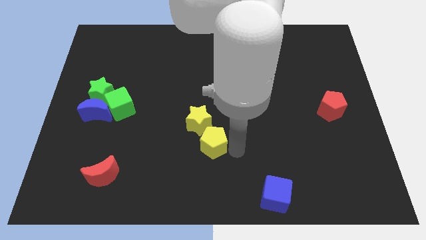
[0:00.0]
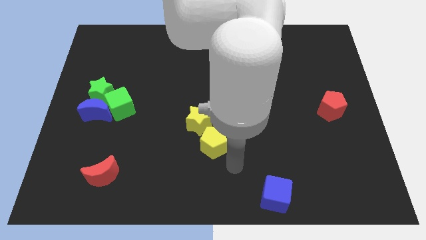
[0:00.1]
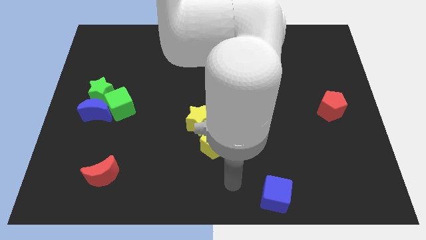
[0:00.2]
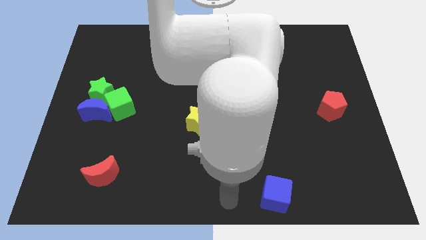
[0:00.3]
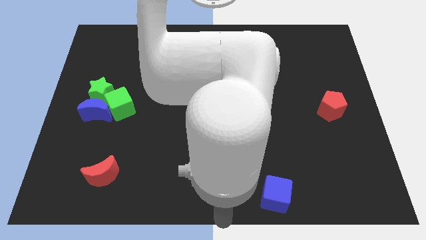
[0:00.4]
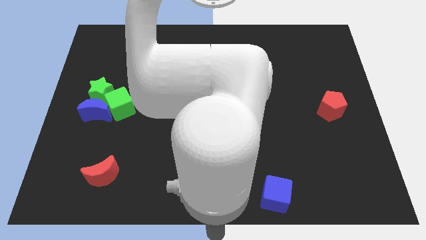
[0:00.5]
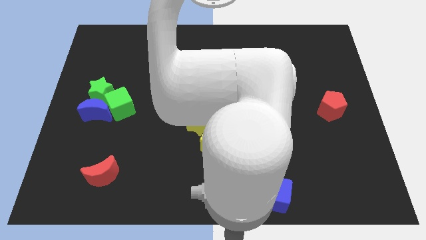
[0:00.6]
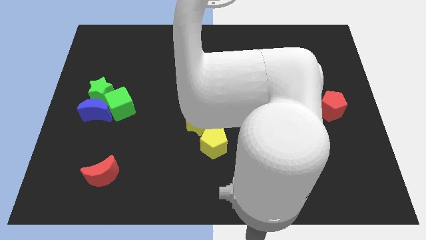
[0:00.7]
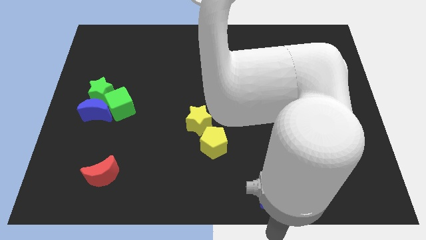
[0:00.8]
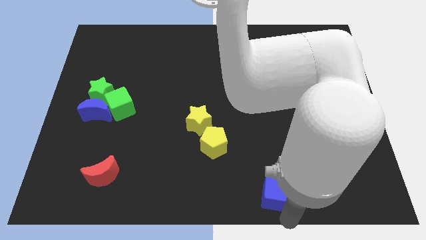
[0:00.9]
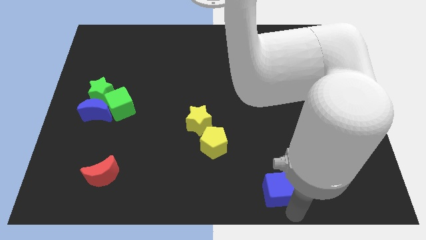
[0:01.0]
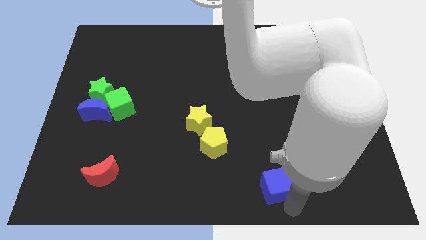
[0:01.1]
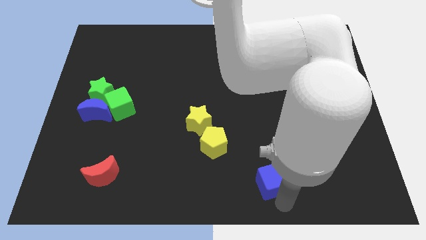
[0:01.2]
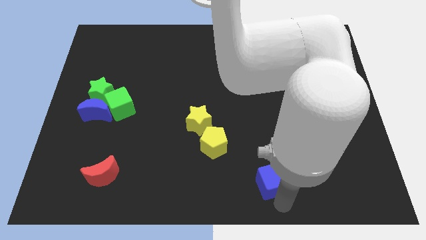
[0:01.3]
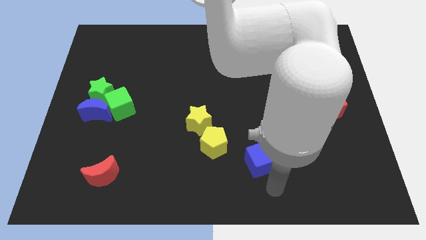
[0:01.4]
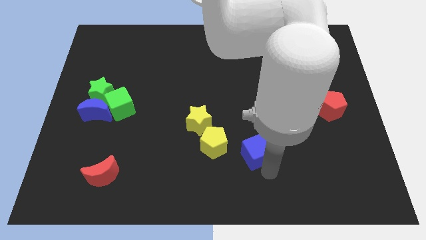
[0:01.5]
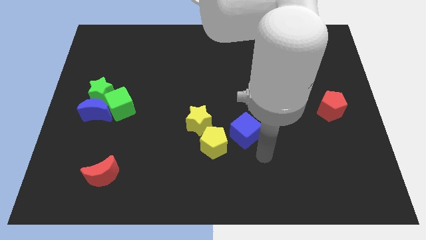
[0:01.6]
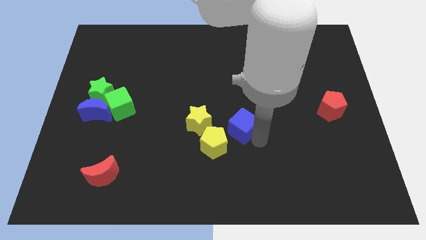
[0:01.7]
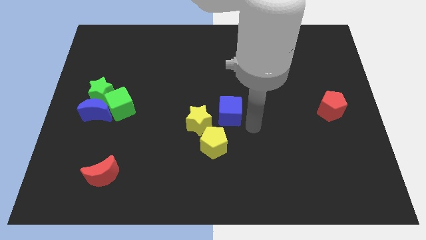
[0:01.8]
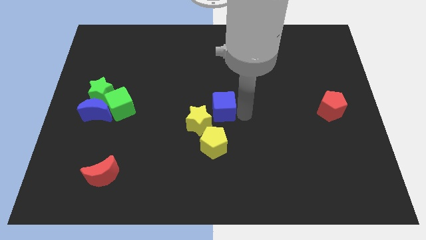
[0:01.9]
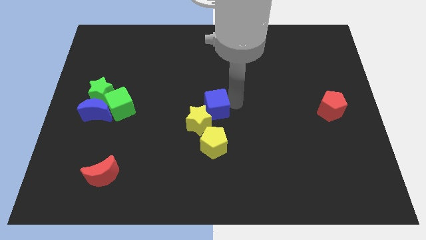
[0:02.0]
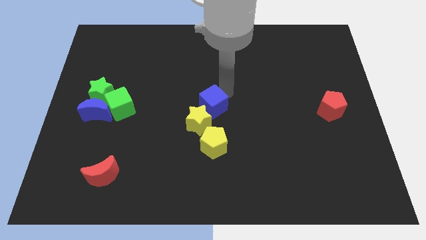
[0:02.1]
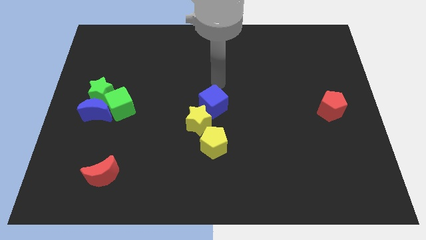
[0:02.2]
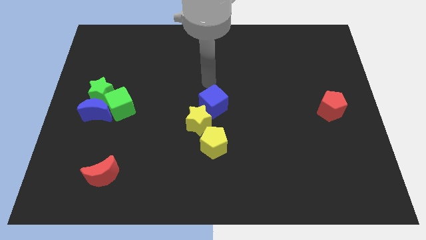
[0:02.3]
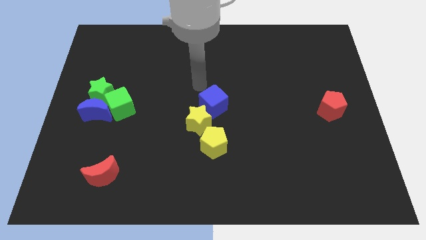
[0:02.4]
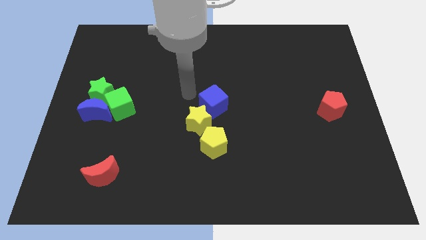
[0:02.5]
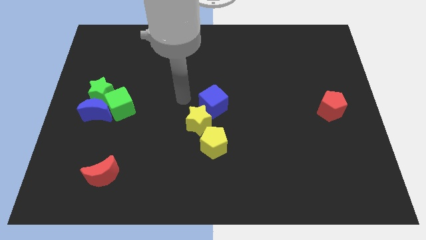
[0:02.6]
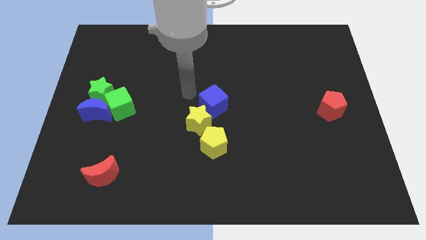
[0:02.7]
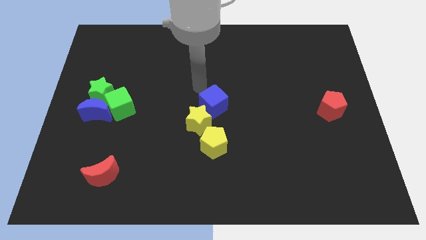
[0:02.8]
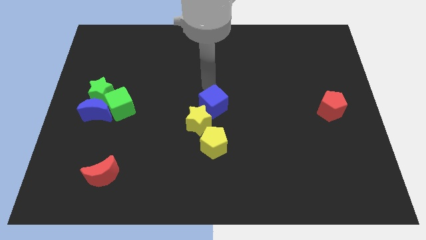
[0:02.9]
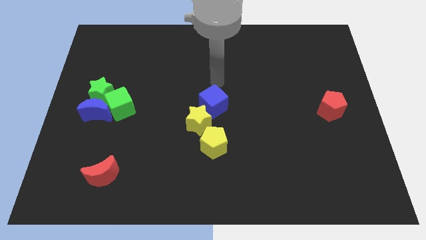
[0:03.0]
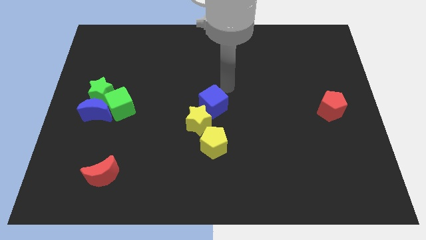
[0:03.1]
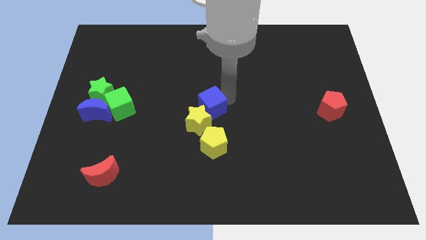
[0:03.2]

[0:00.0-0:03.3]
move the blue cube to the center of the board

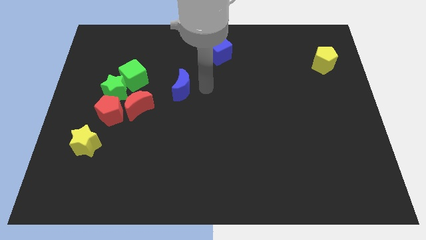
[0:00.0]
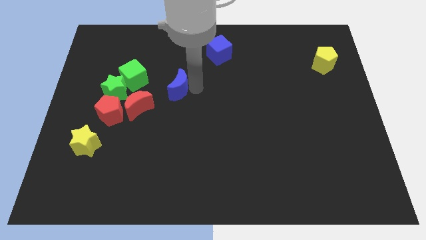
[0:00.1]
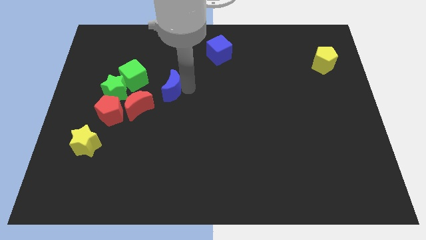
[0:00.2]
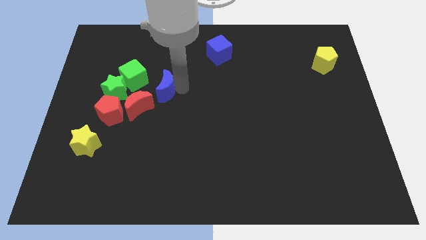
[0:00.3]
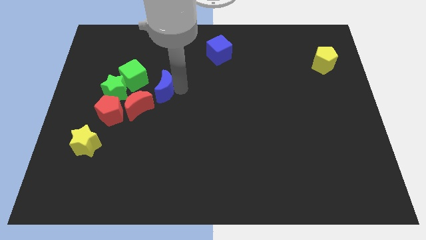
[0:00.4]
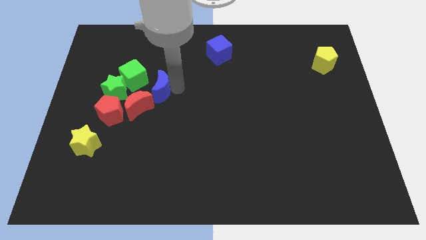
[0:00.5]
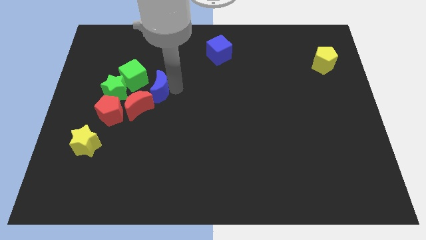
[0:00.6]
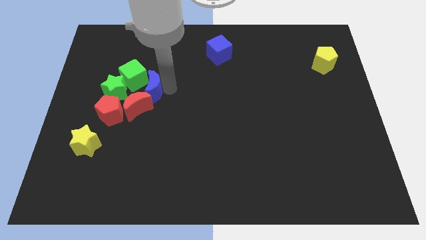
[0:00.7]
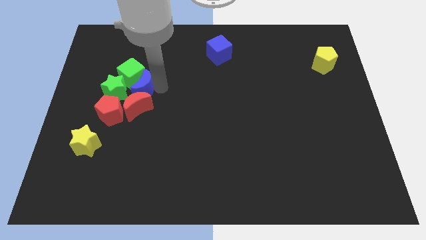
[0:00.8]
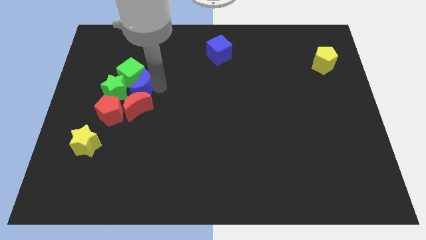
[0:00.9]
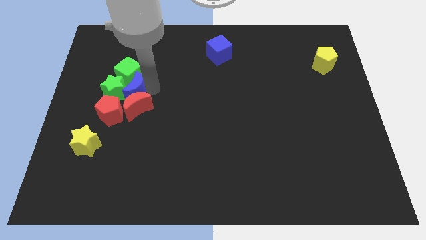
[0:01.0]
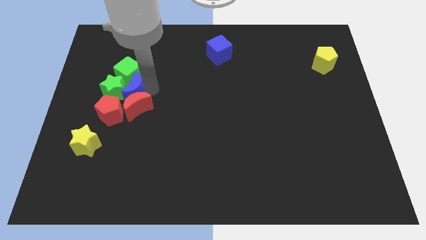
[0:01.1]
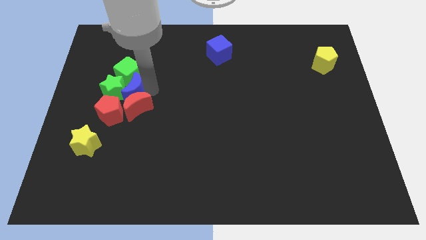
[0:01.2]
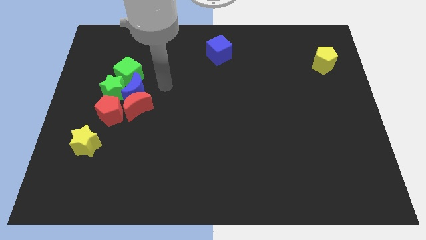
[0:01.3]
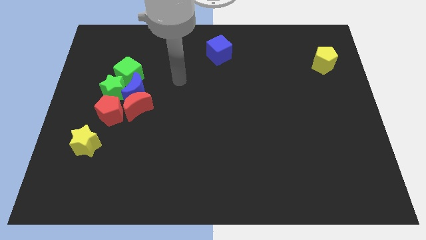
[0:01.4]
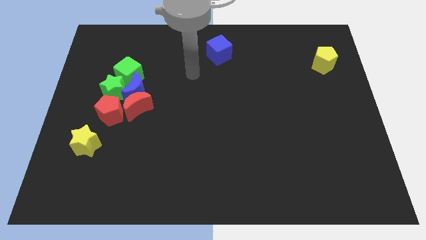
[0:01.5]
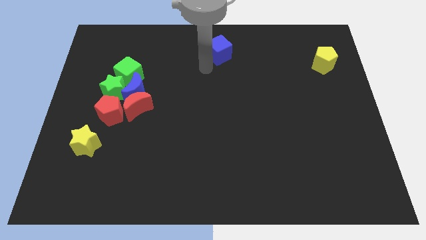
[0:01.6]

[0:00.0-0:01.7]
push the blue moon into the group of blocks

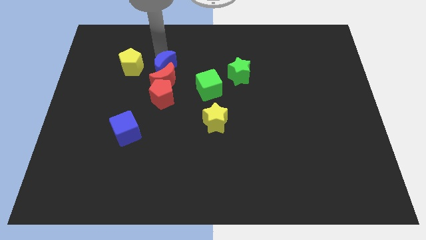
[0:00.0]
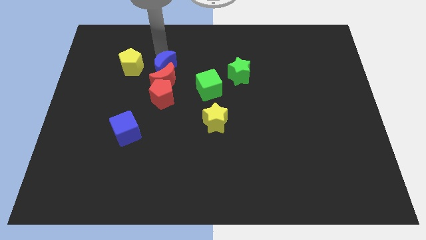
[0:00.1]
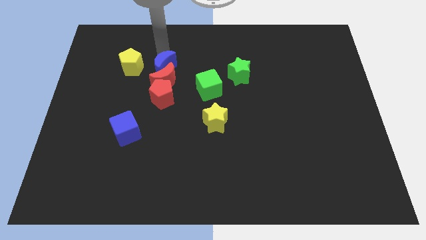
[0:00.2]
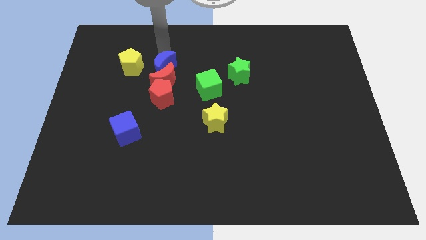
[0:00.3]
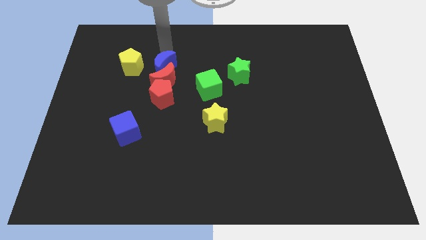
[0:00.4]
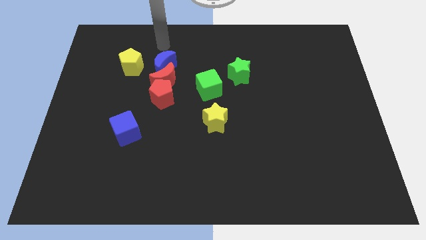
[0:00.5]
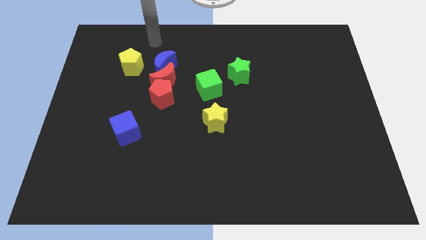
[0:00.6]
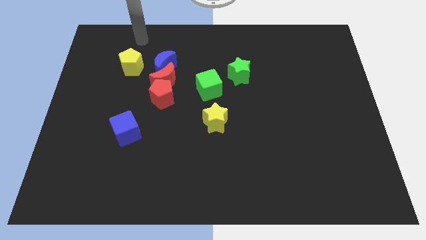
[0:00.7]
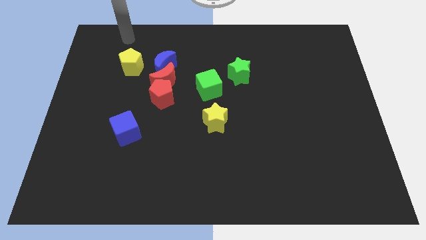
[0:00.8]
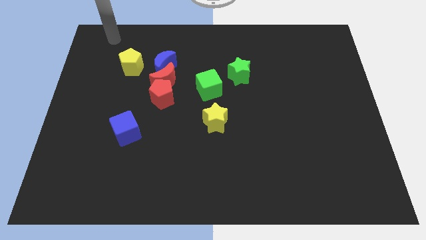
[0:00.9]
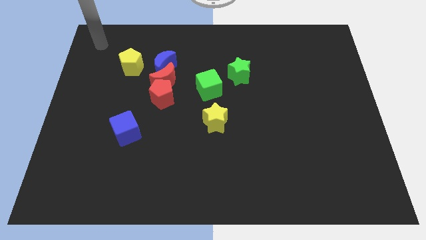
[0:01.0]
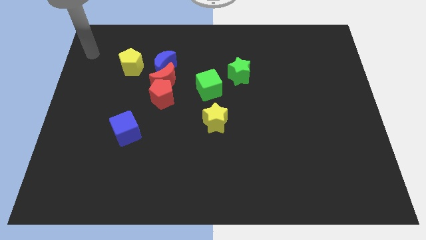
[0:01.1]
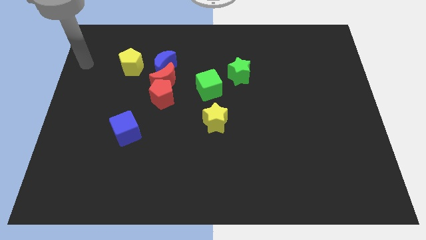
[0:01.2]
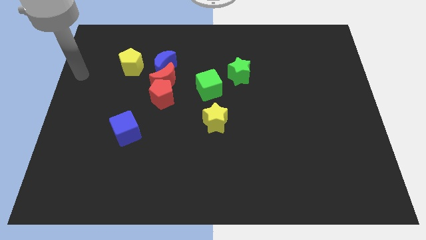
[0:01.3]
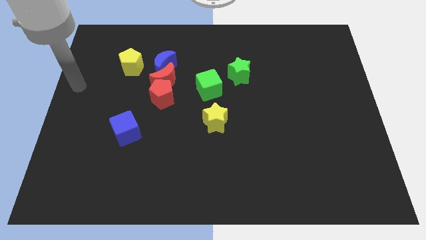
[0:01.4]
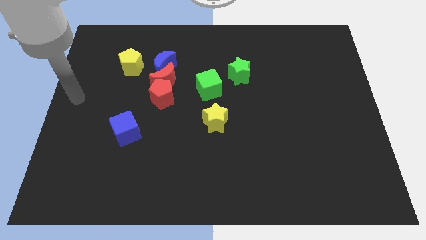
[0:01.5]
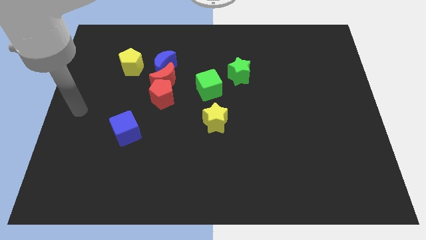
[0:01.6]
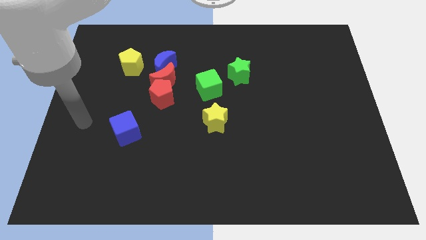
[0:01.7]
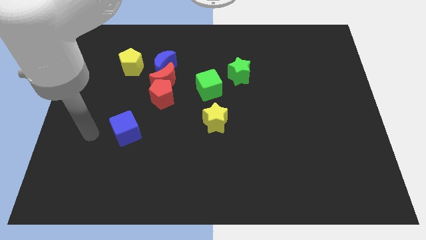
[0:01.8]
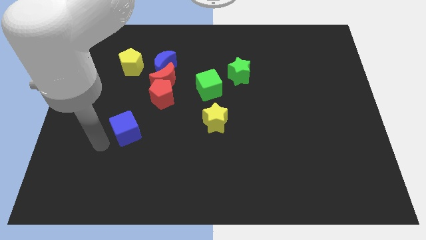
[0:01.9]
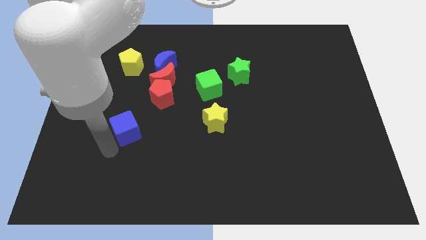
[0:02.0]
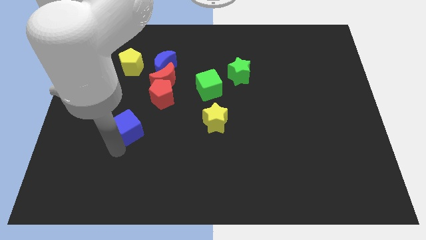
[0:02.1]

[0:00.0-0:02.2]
move the blue cube slightly towards top

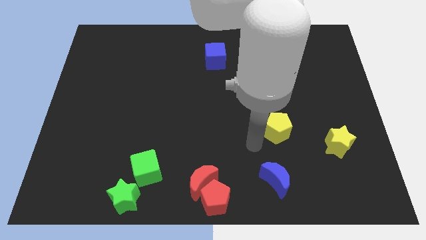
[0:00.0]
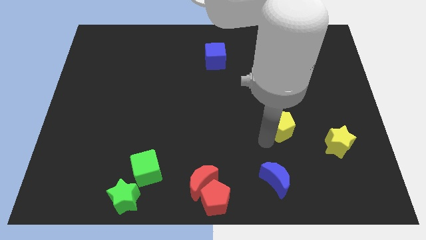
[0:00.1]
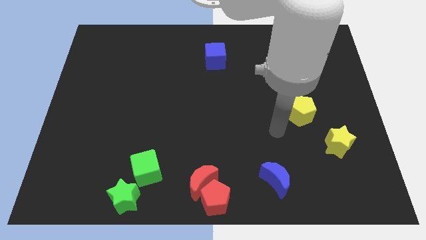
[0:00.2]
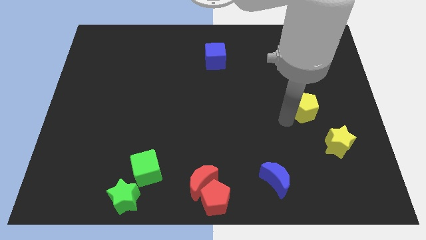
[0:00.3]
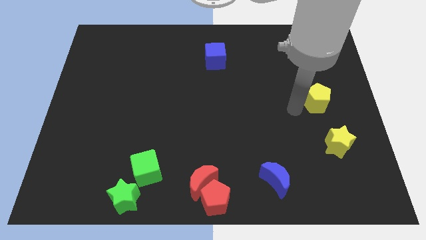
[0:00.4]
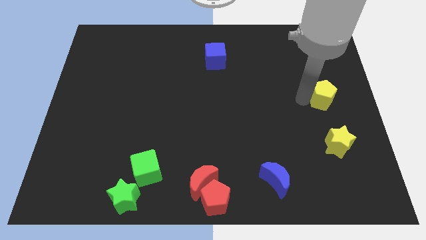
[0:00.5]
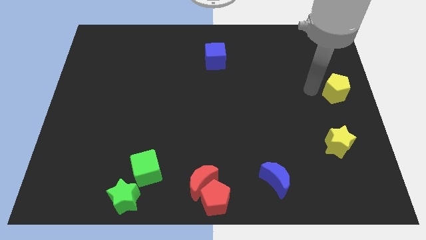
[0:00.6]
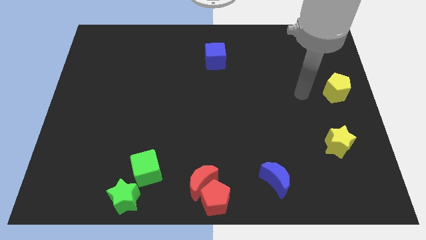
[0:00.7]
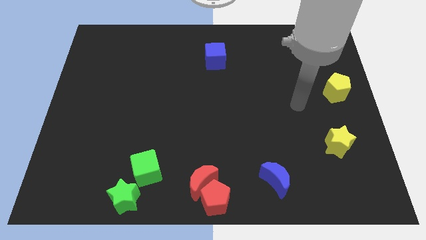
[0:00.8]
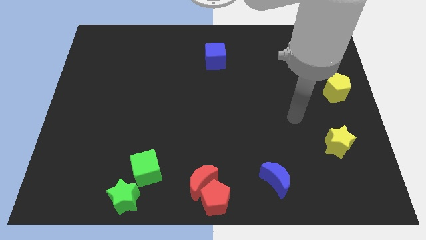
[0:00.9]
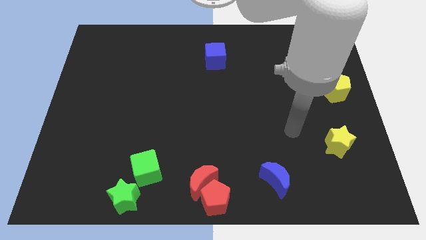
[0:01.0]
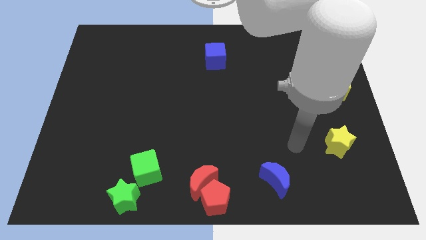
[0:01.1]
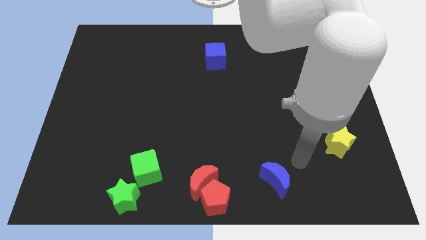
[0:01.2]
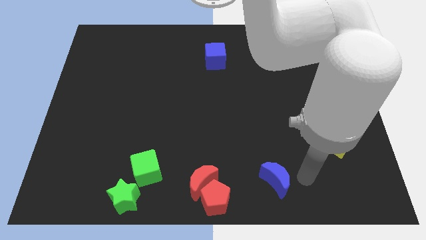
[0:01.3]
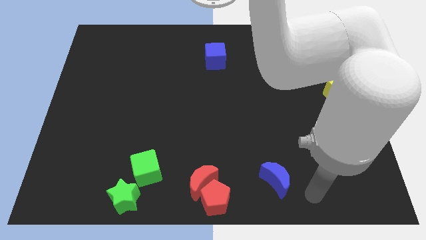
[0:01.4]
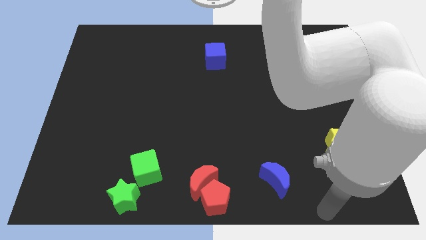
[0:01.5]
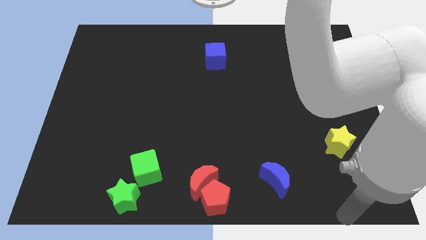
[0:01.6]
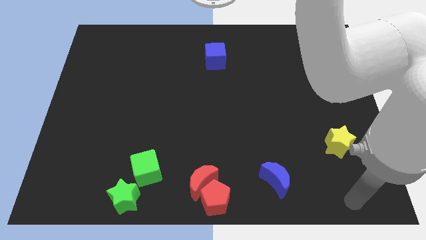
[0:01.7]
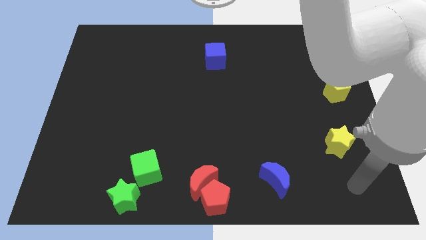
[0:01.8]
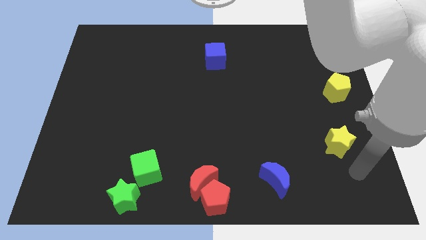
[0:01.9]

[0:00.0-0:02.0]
move yellow pentagon parallel to yellow star
